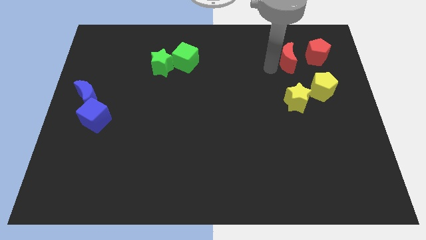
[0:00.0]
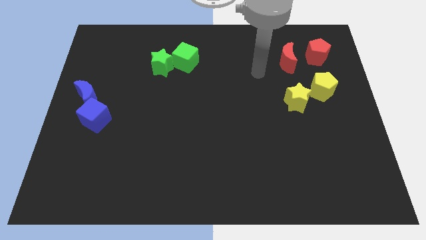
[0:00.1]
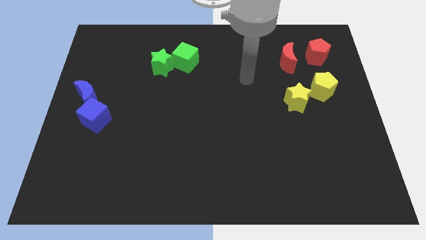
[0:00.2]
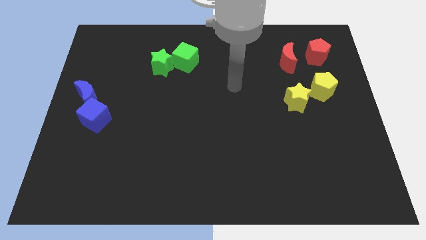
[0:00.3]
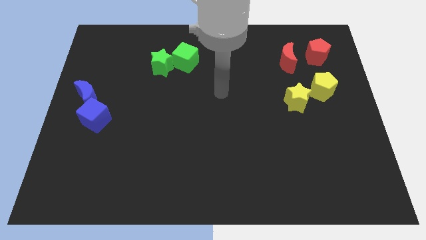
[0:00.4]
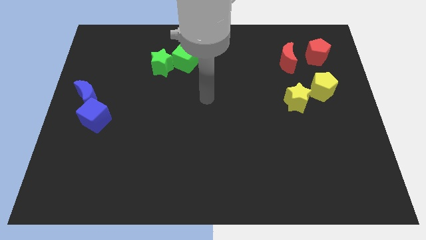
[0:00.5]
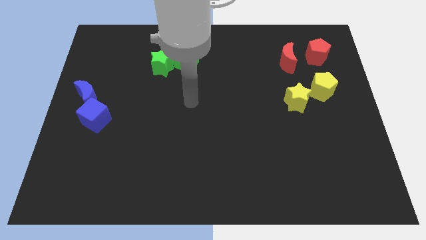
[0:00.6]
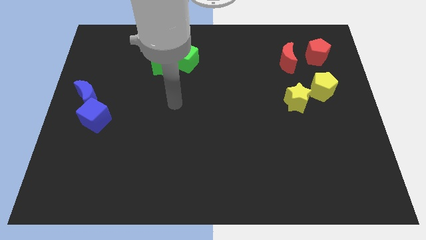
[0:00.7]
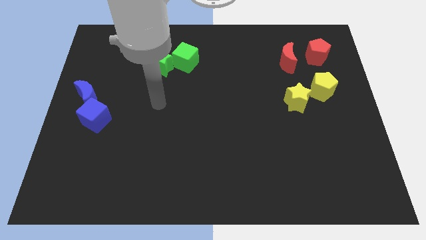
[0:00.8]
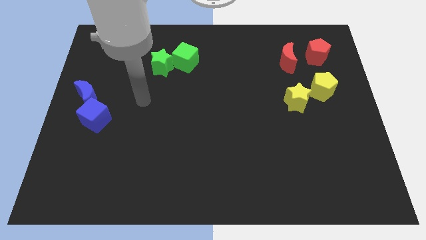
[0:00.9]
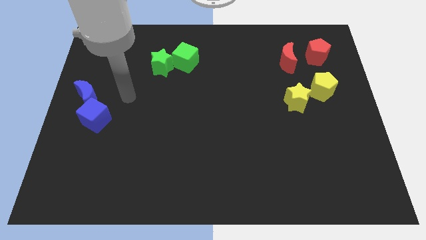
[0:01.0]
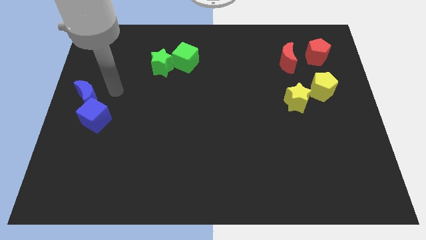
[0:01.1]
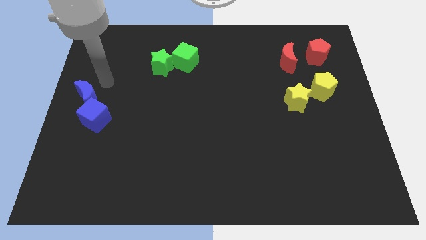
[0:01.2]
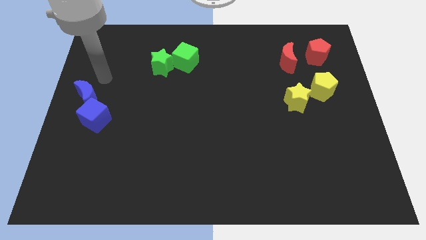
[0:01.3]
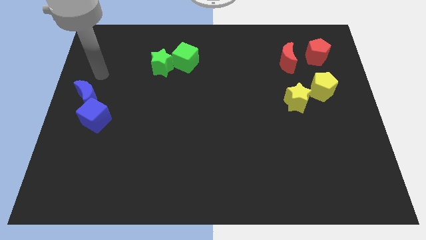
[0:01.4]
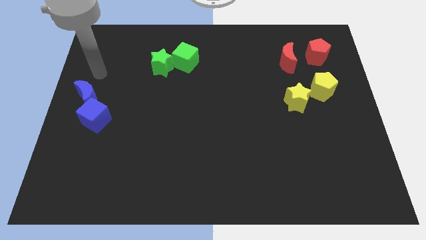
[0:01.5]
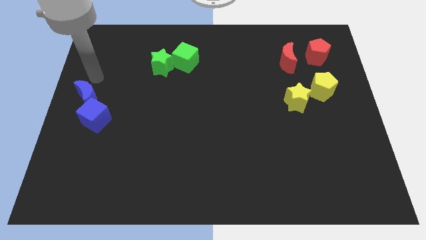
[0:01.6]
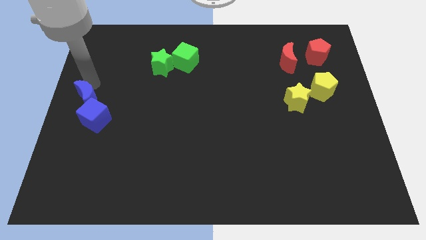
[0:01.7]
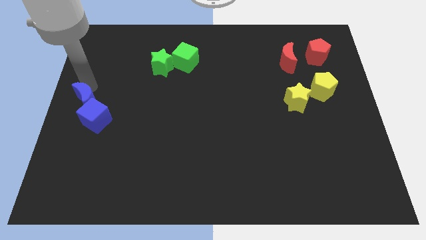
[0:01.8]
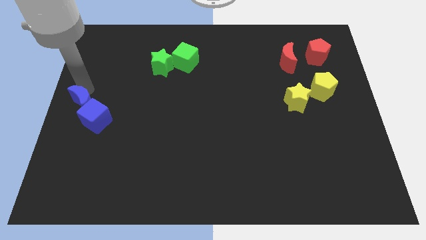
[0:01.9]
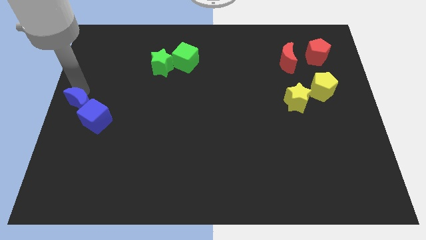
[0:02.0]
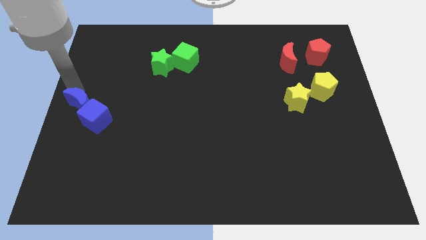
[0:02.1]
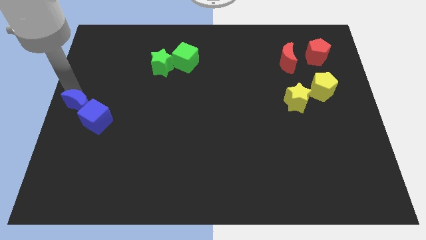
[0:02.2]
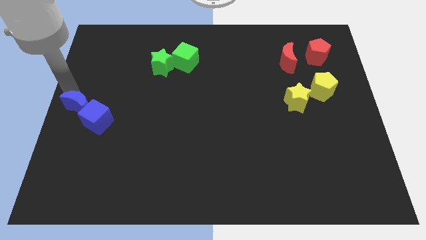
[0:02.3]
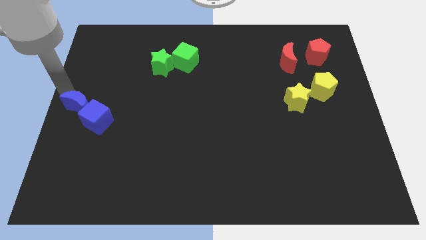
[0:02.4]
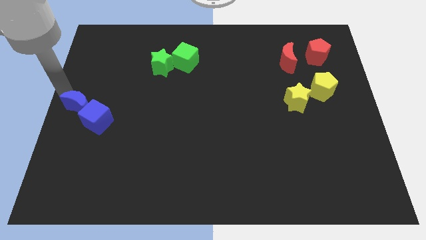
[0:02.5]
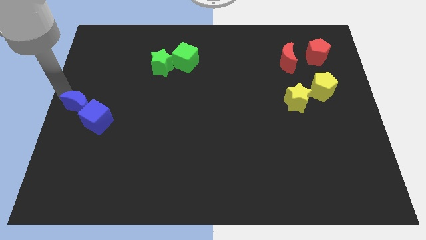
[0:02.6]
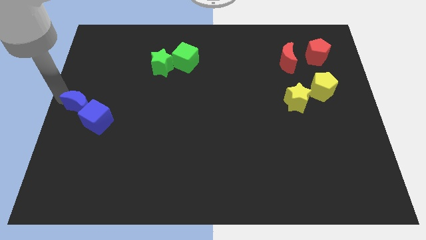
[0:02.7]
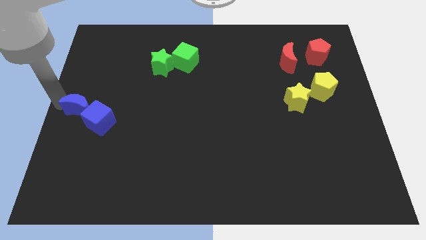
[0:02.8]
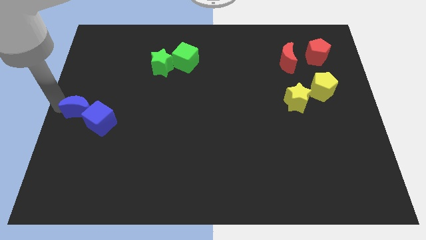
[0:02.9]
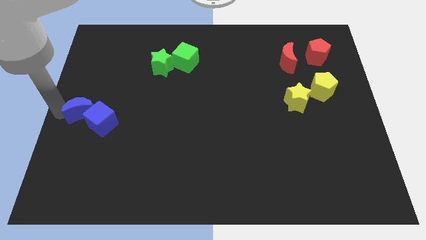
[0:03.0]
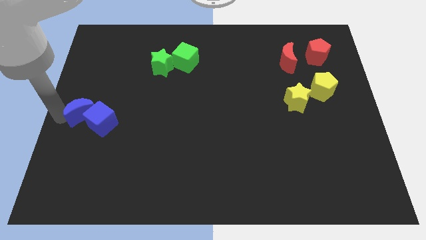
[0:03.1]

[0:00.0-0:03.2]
place blue moon to the left of blue cube

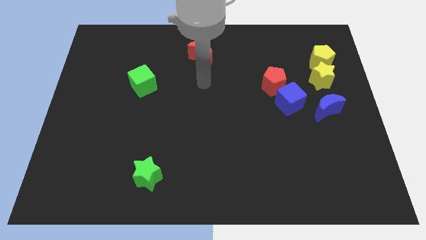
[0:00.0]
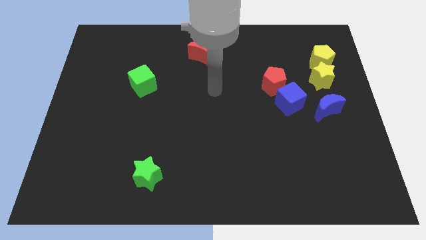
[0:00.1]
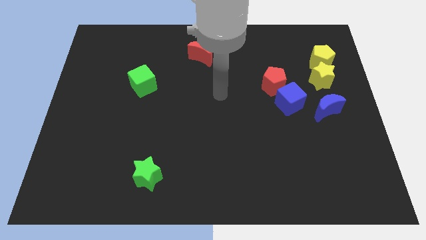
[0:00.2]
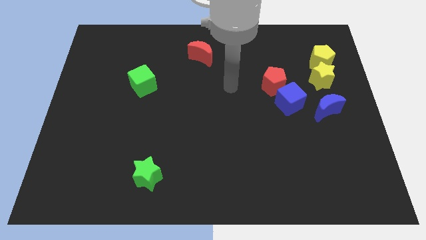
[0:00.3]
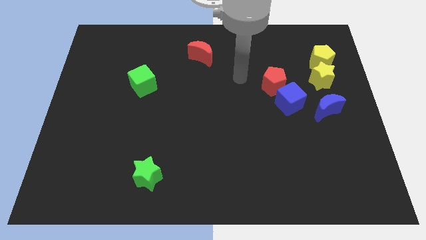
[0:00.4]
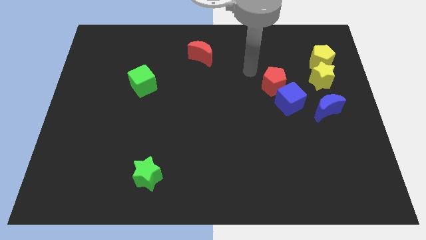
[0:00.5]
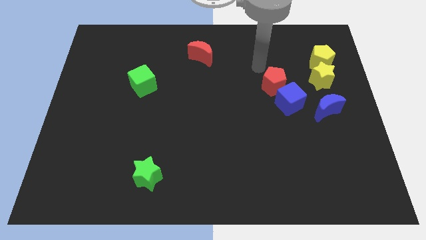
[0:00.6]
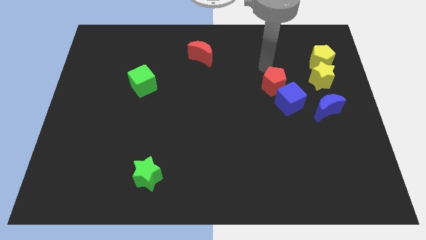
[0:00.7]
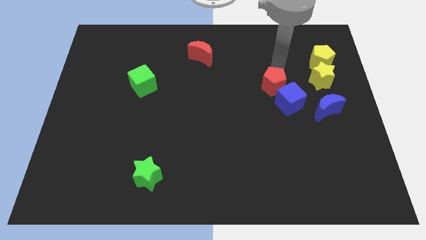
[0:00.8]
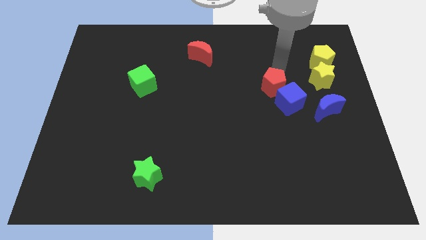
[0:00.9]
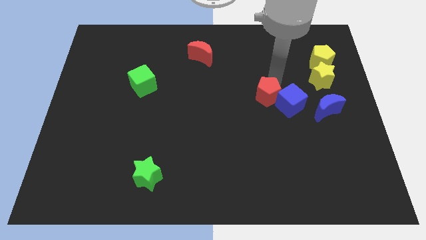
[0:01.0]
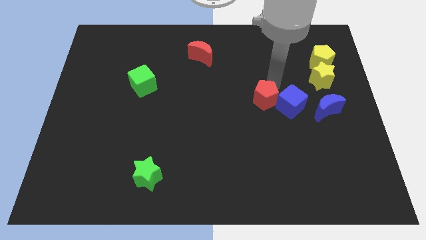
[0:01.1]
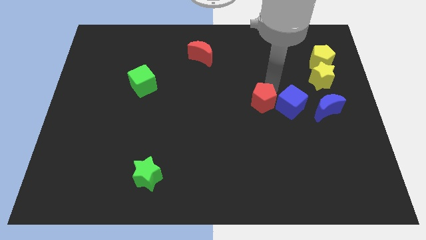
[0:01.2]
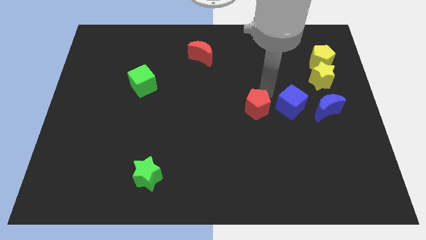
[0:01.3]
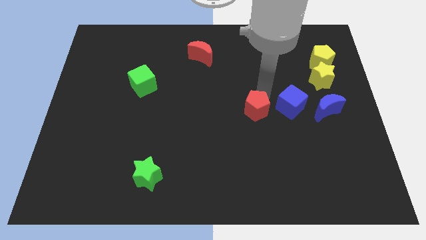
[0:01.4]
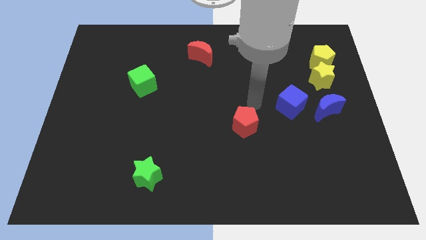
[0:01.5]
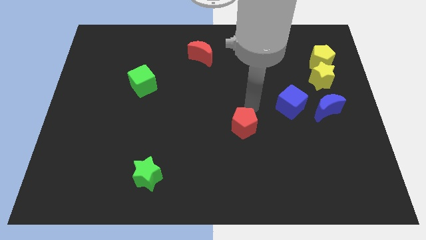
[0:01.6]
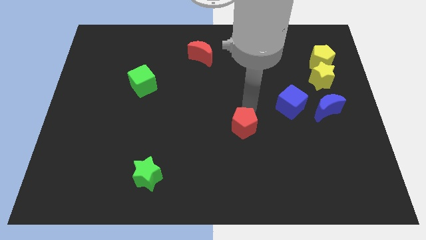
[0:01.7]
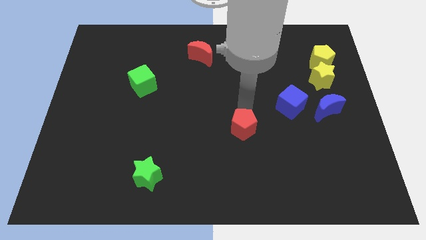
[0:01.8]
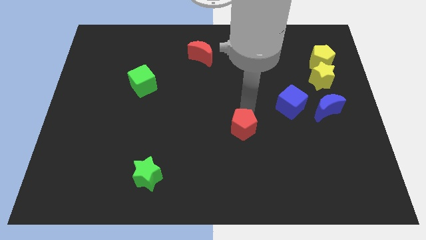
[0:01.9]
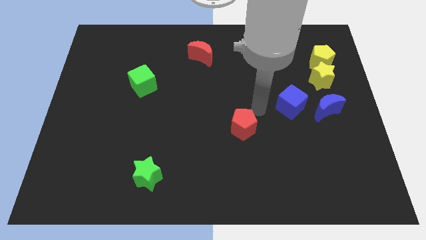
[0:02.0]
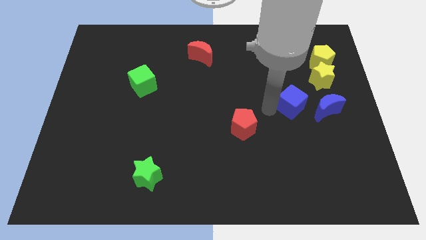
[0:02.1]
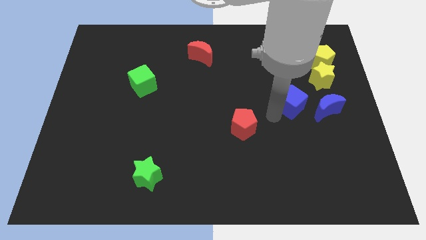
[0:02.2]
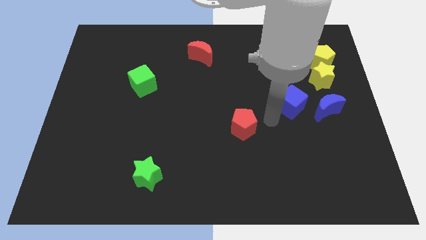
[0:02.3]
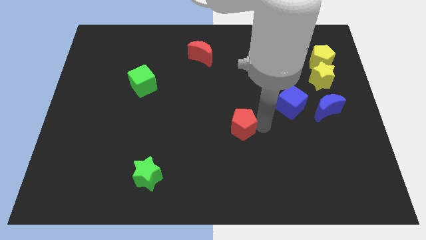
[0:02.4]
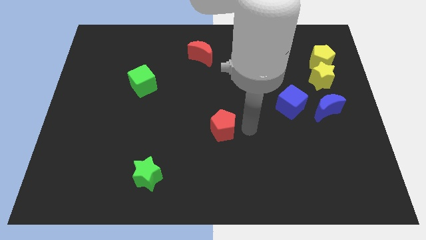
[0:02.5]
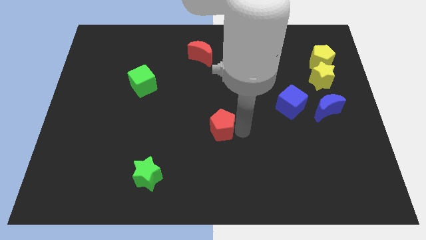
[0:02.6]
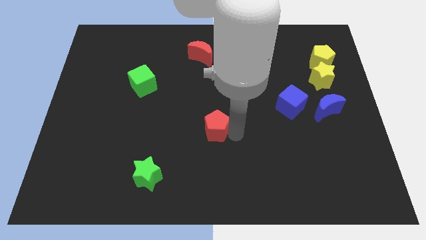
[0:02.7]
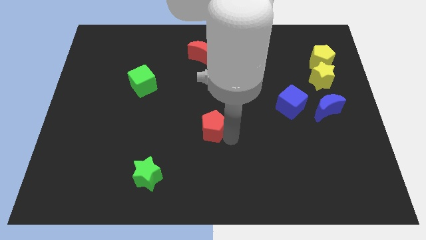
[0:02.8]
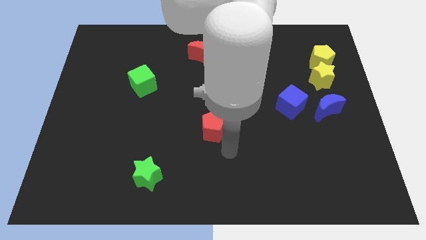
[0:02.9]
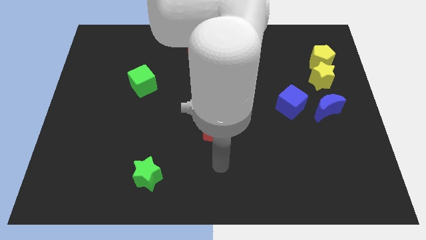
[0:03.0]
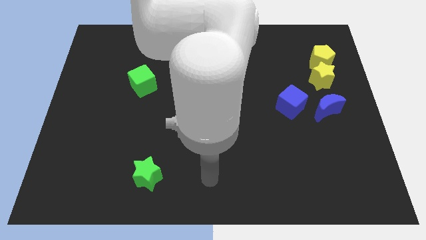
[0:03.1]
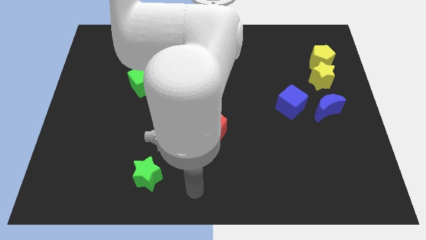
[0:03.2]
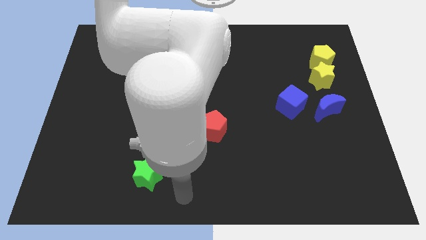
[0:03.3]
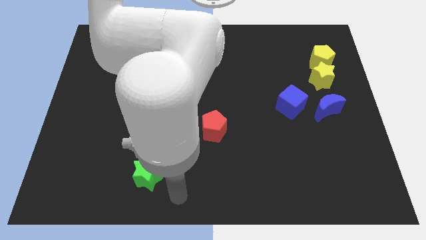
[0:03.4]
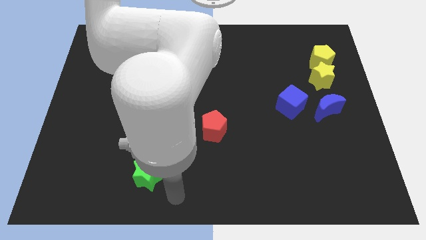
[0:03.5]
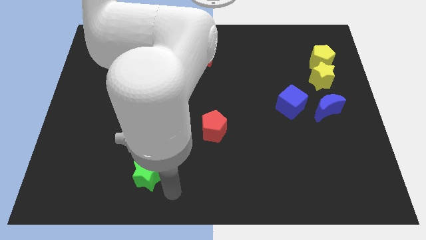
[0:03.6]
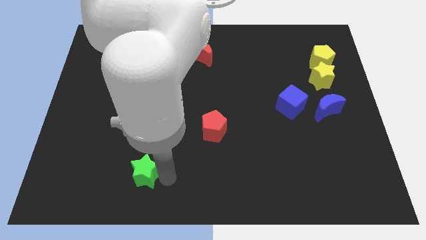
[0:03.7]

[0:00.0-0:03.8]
put the red pentagon vertically at the bottom side of the red moon

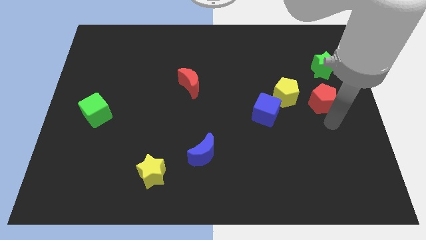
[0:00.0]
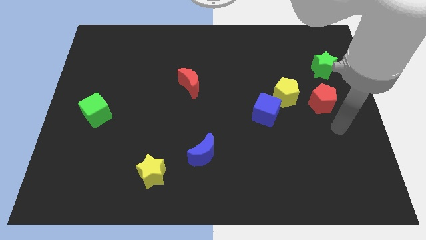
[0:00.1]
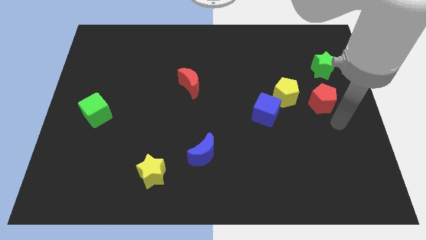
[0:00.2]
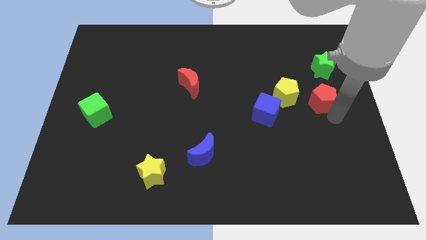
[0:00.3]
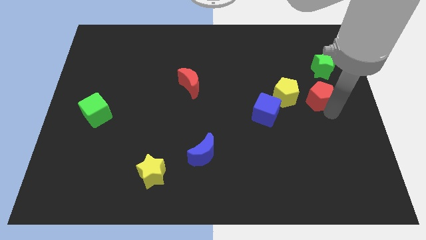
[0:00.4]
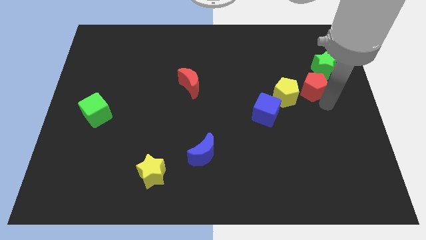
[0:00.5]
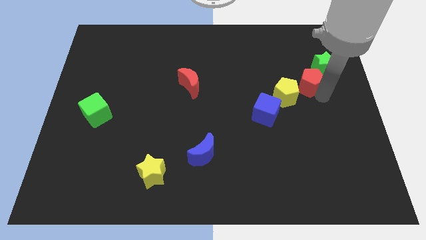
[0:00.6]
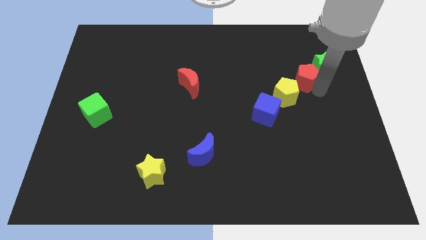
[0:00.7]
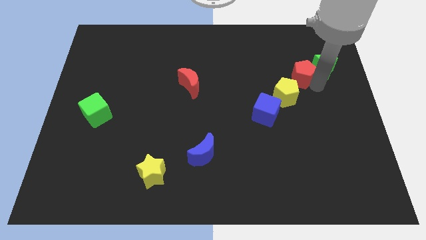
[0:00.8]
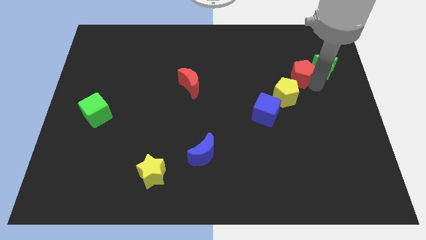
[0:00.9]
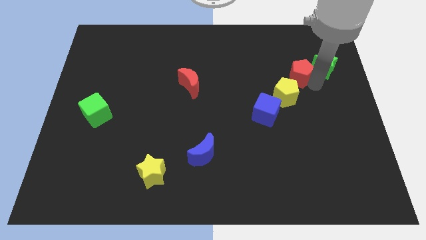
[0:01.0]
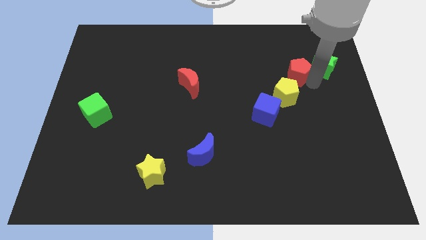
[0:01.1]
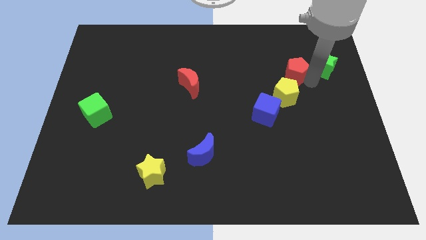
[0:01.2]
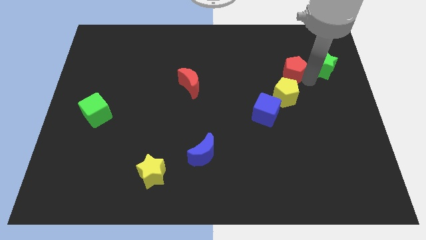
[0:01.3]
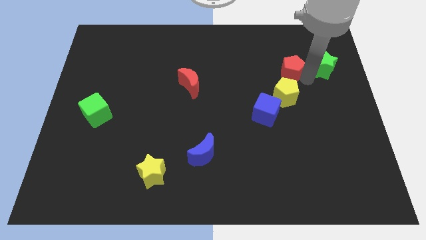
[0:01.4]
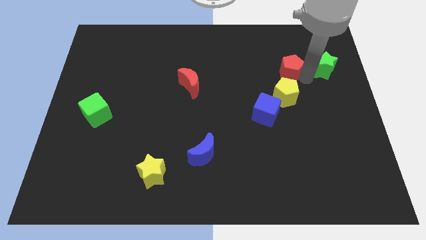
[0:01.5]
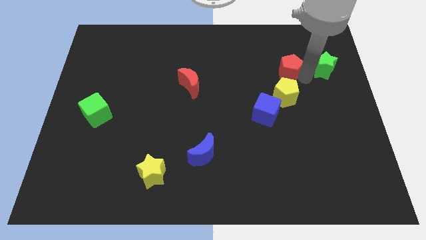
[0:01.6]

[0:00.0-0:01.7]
move the red pentagon above the yellow pentagon

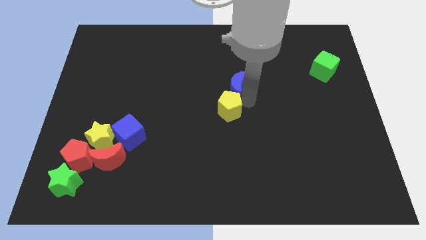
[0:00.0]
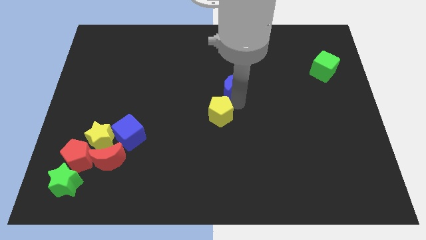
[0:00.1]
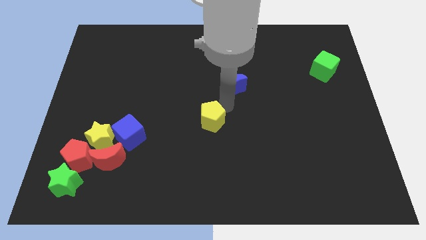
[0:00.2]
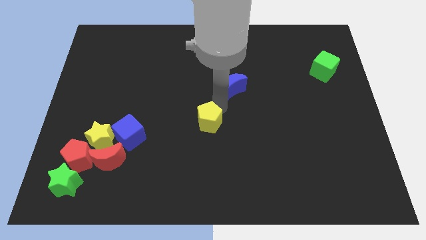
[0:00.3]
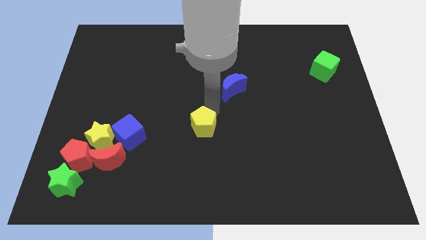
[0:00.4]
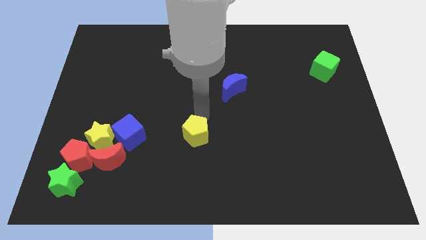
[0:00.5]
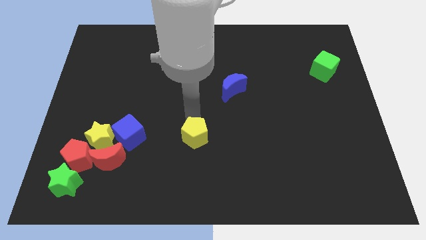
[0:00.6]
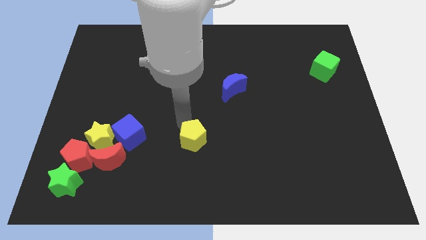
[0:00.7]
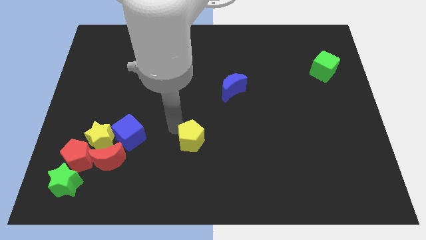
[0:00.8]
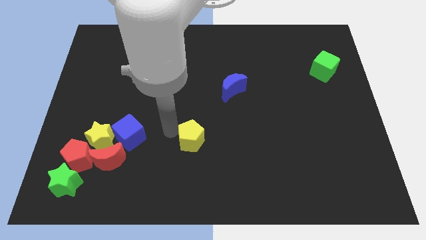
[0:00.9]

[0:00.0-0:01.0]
separate the yellow pentagon and the blue crescent
